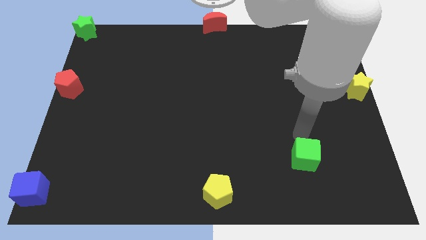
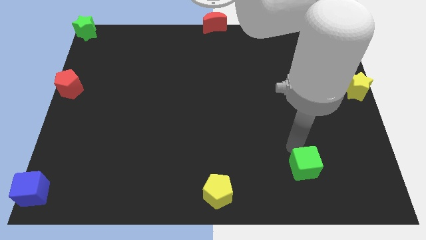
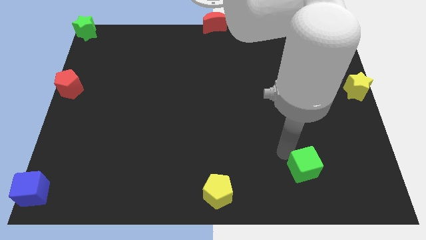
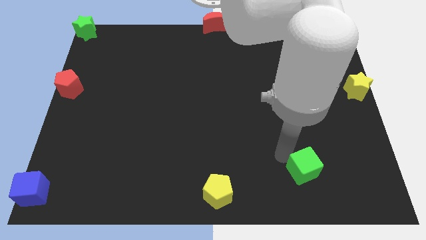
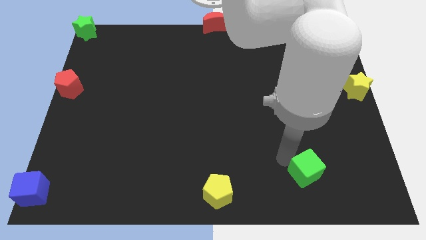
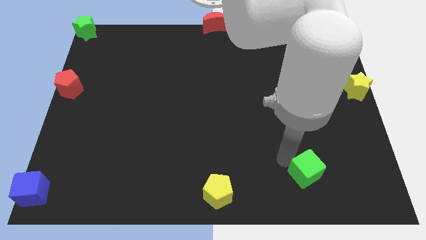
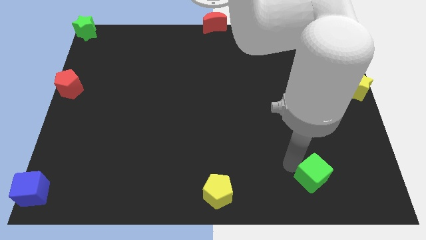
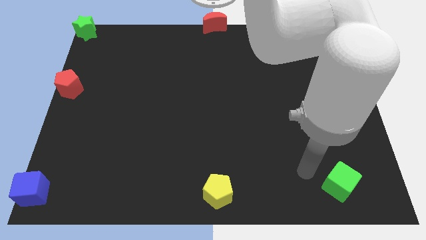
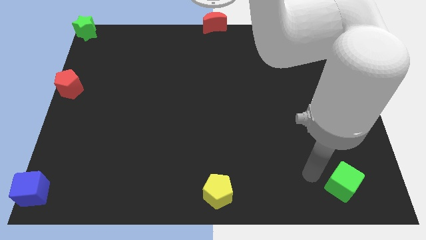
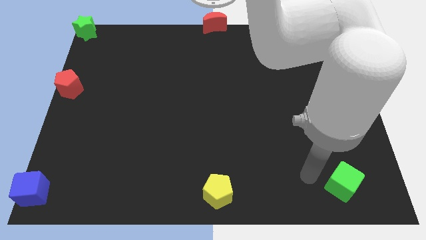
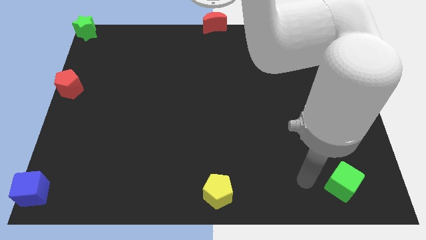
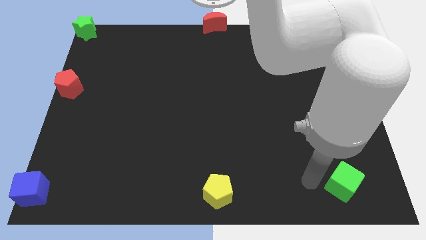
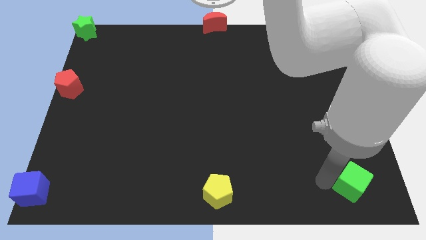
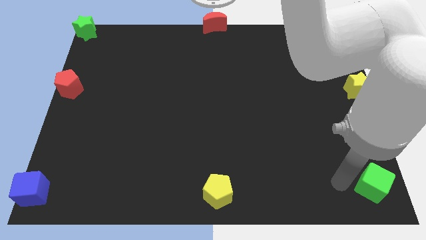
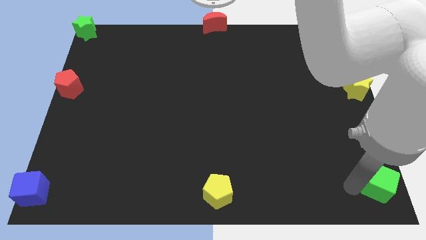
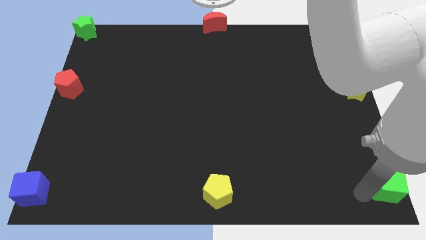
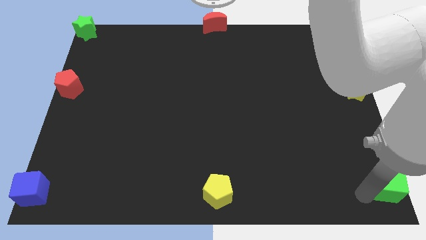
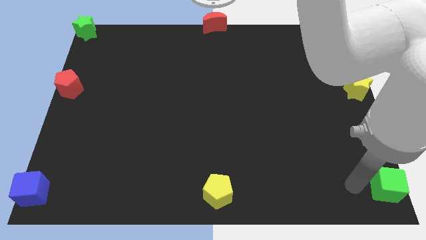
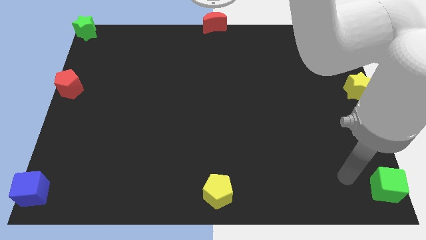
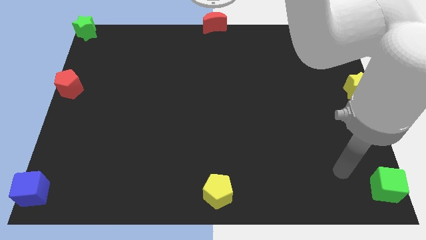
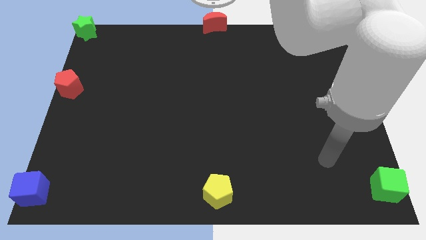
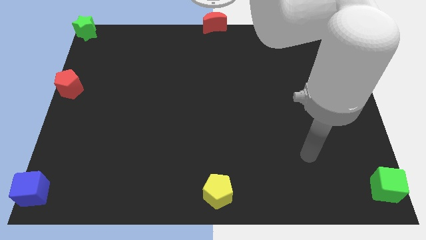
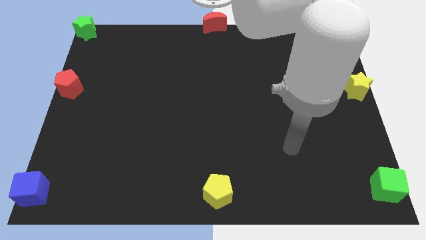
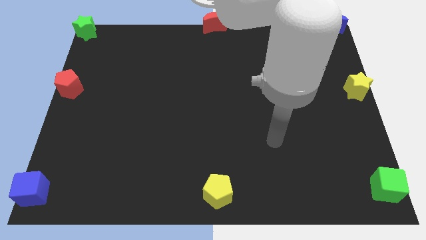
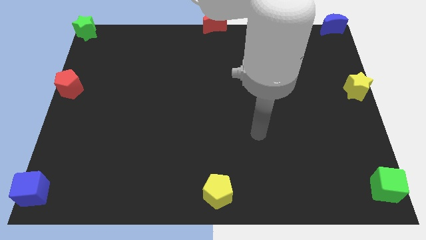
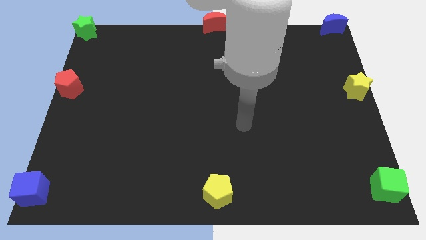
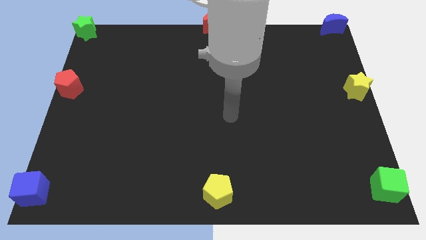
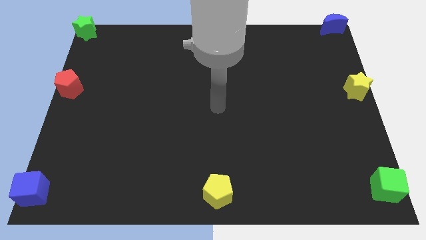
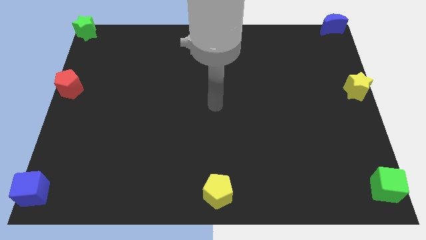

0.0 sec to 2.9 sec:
push the green cube to the bottom right of the board

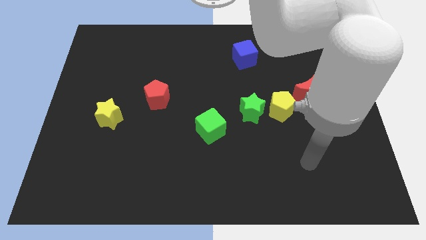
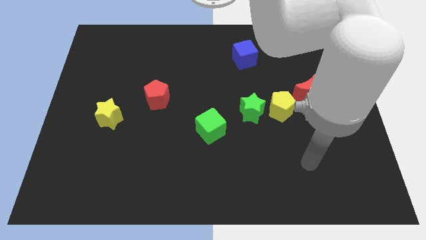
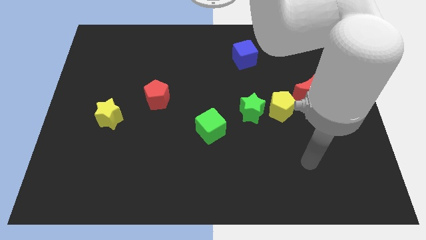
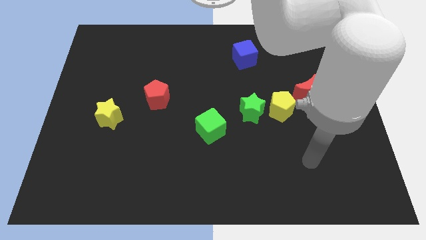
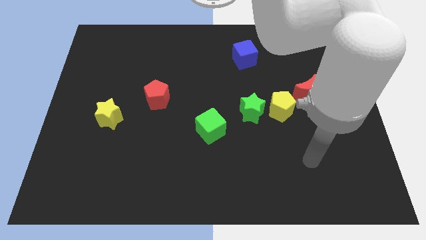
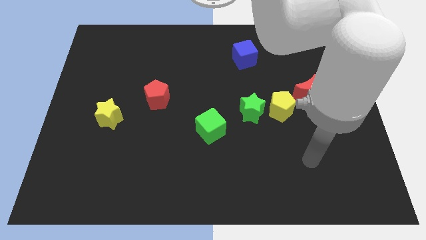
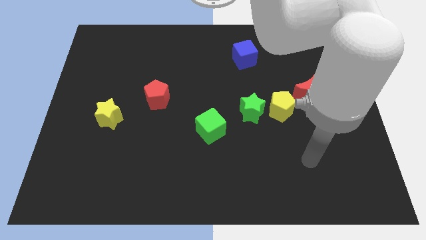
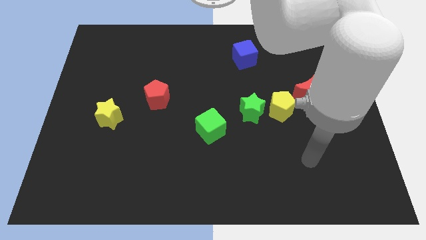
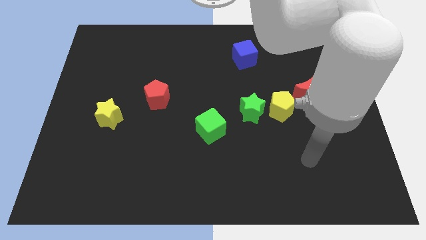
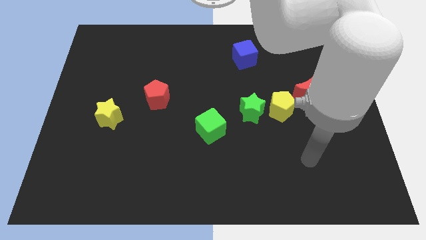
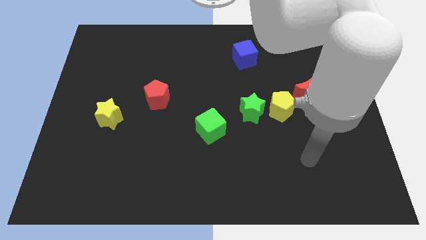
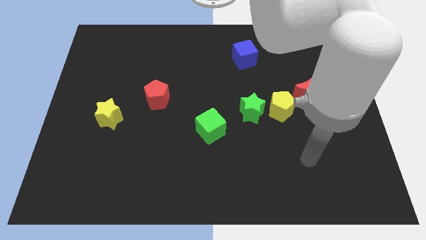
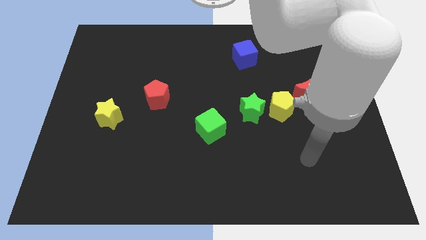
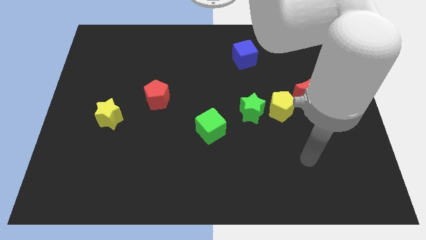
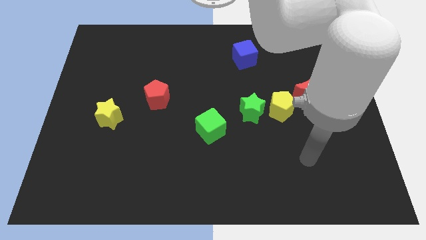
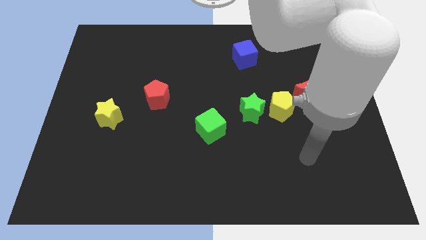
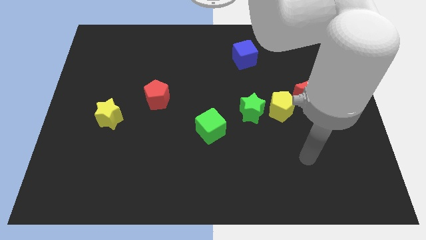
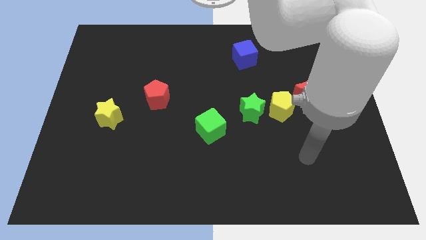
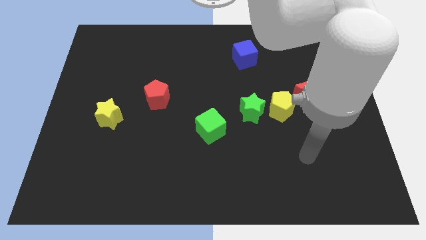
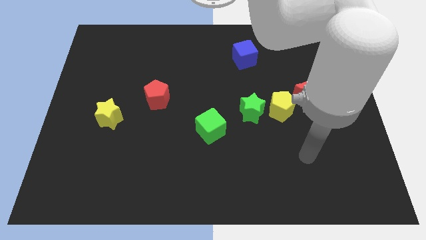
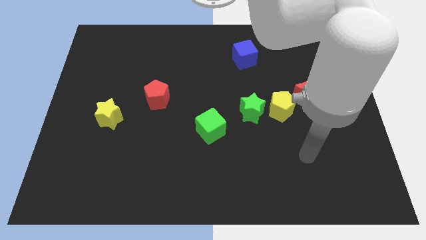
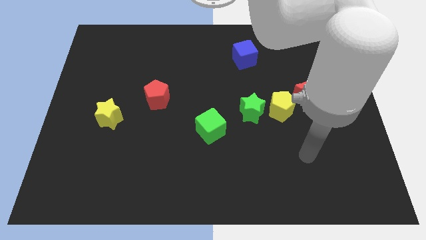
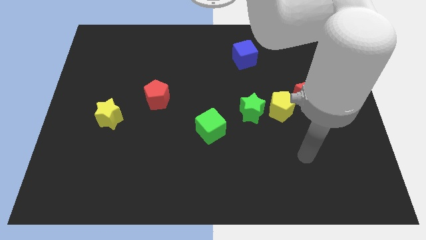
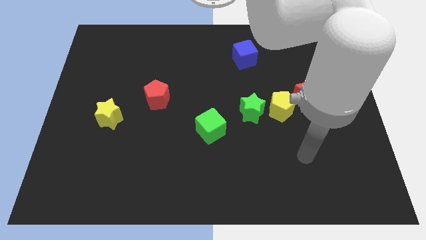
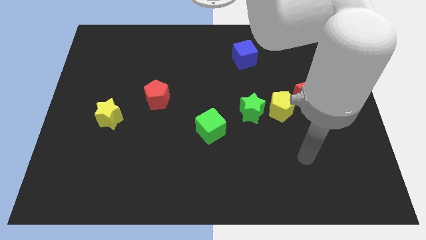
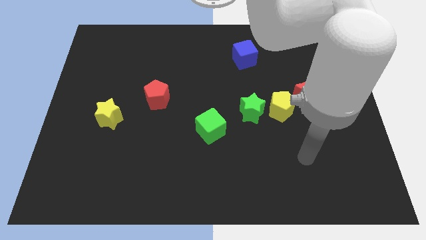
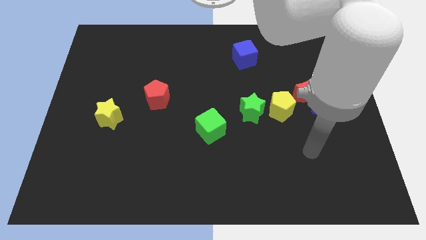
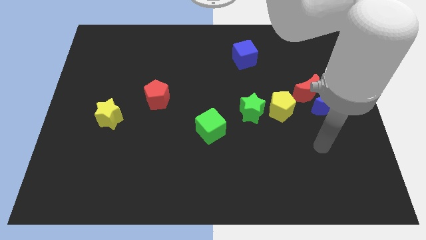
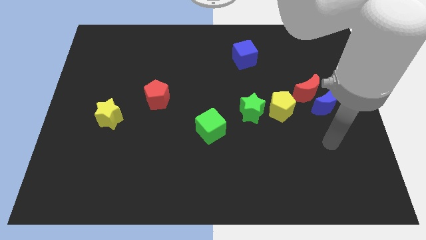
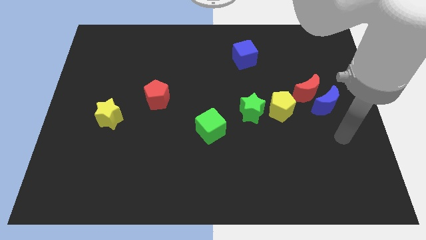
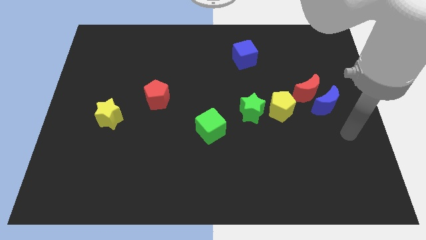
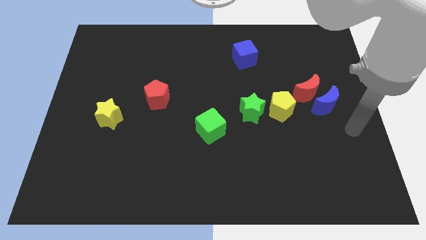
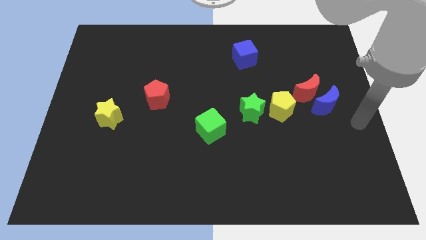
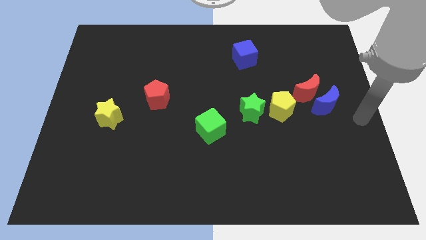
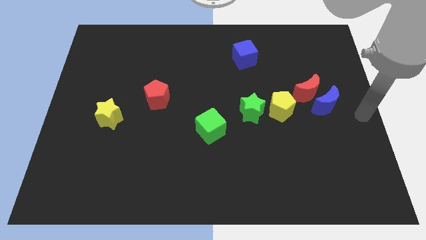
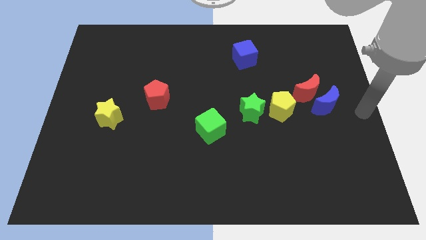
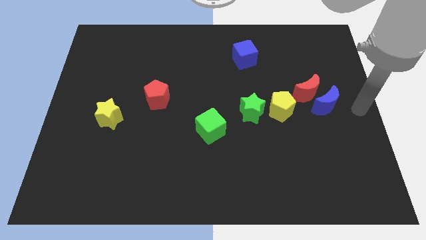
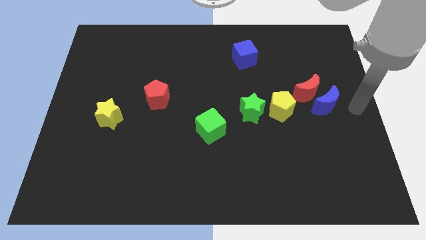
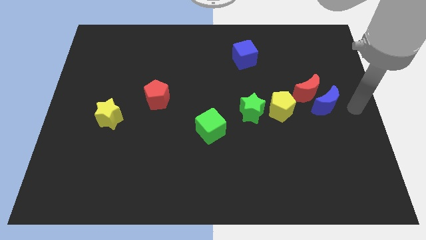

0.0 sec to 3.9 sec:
move your arm to the right side of the blue moon

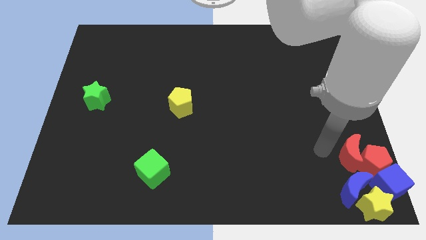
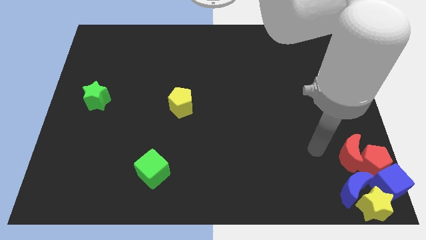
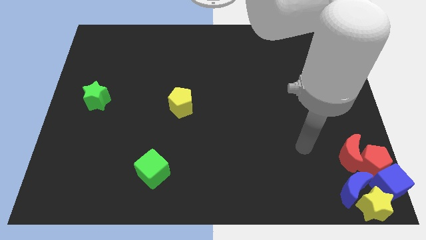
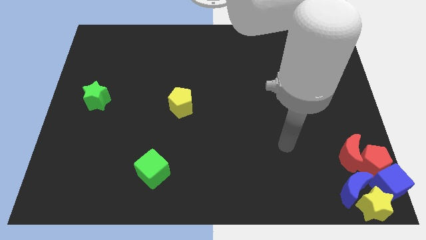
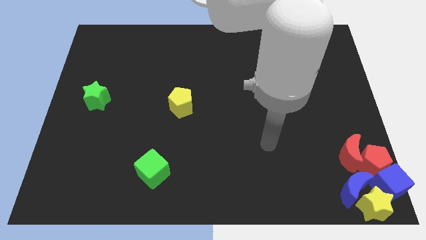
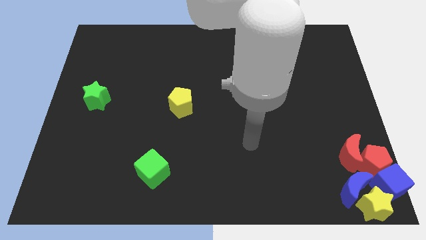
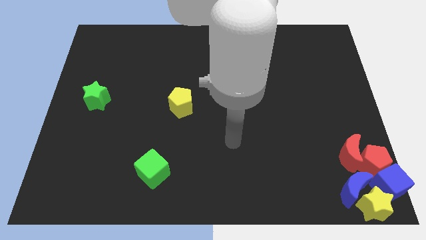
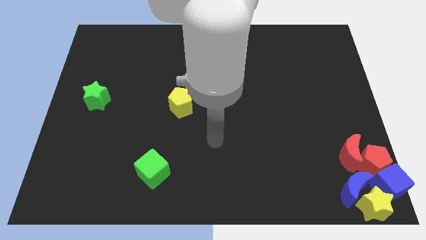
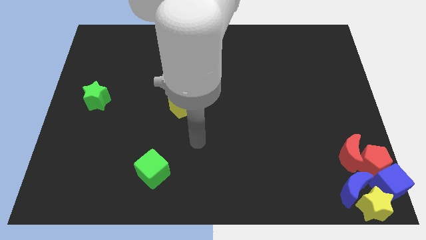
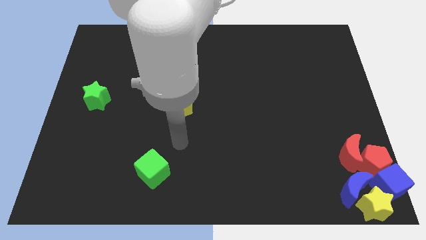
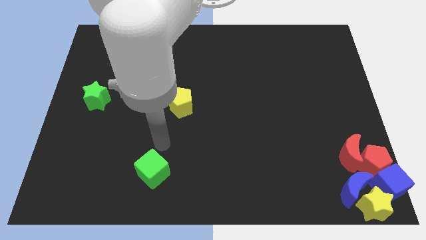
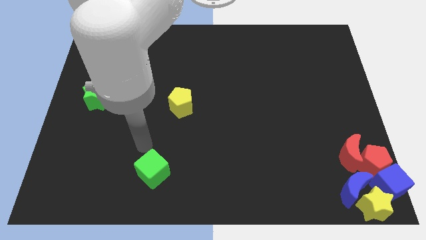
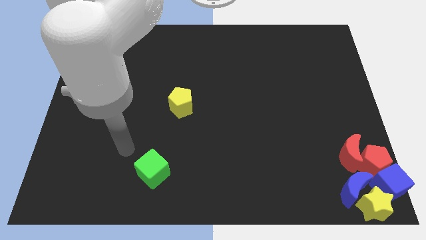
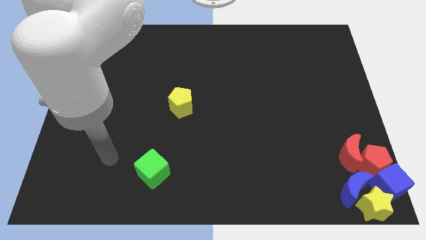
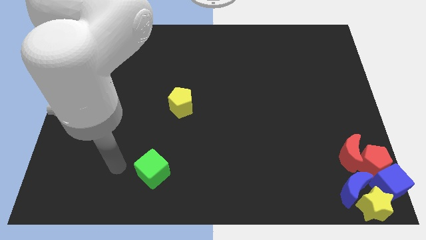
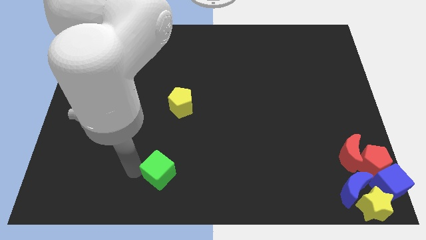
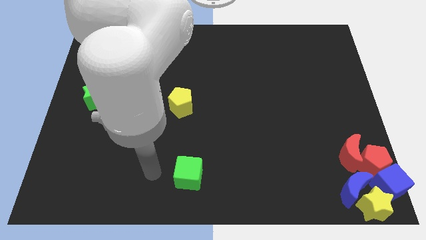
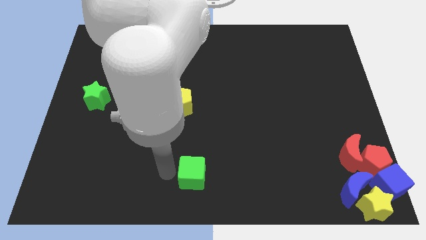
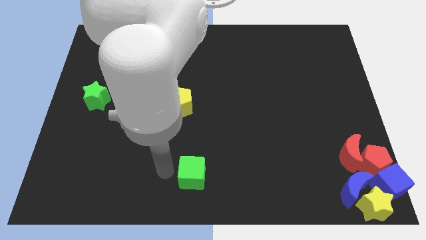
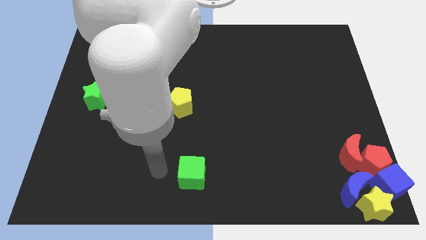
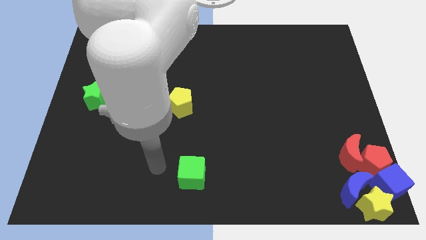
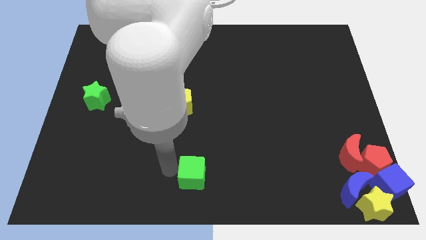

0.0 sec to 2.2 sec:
move the green cube slightly to the right side of the board
